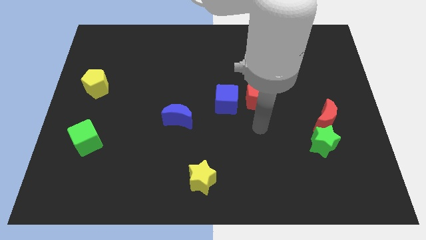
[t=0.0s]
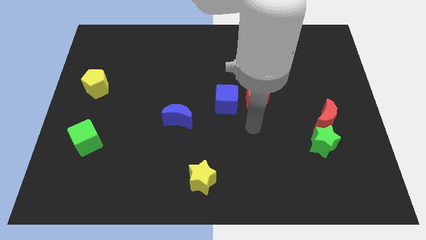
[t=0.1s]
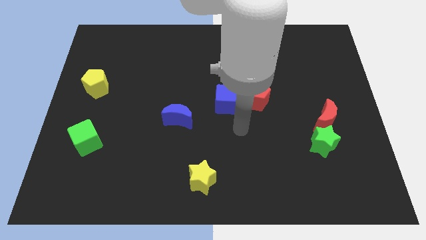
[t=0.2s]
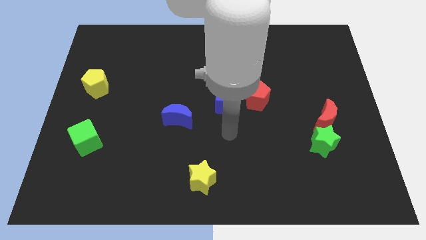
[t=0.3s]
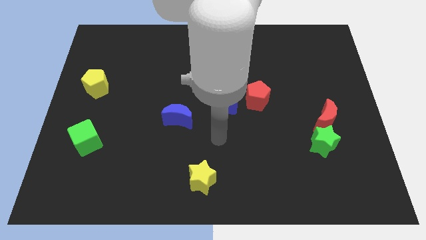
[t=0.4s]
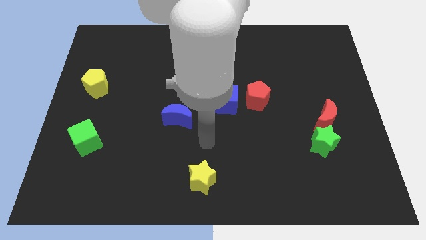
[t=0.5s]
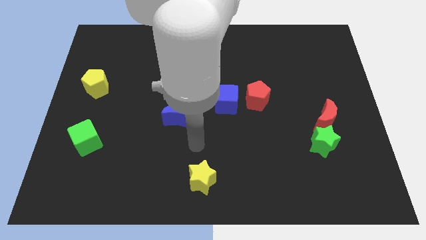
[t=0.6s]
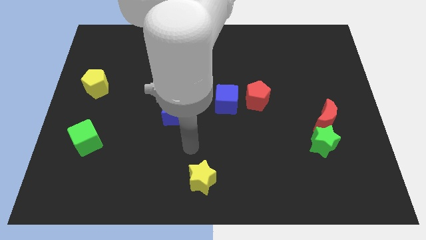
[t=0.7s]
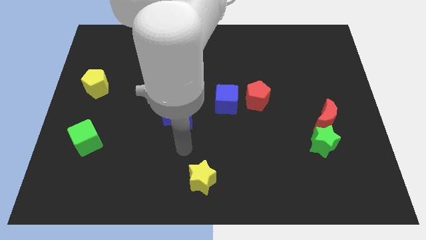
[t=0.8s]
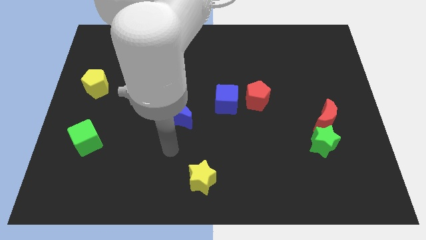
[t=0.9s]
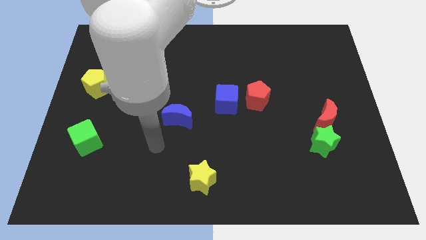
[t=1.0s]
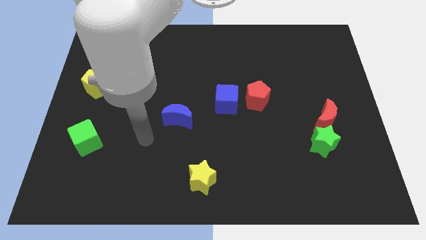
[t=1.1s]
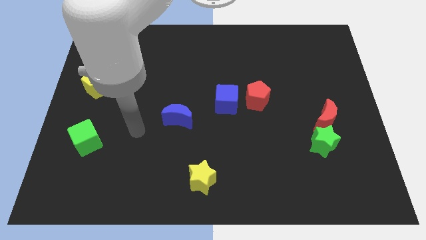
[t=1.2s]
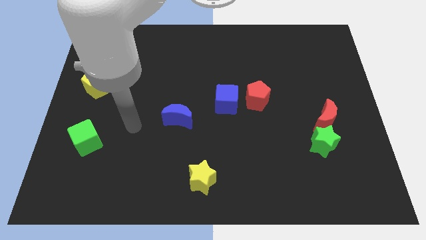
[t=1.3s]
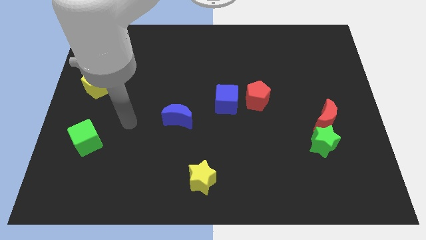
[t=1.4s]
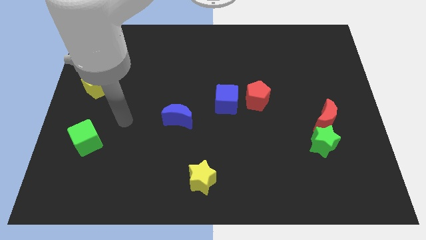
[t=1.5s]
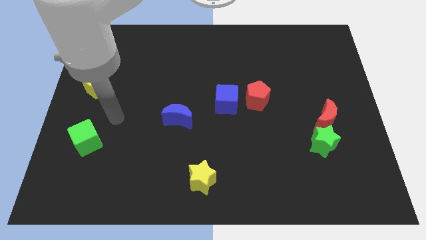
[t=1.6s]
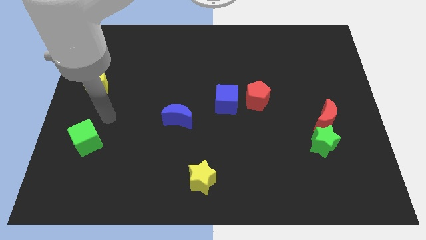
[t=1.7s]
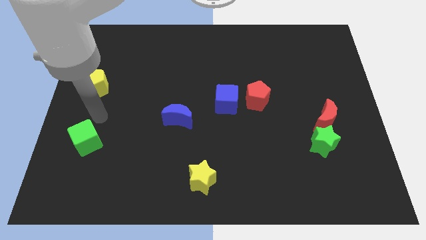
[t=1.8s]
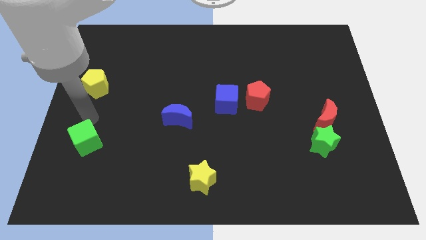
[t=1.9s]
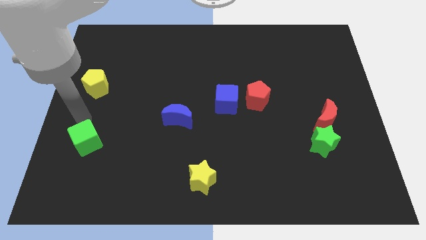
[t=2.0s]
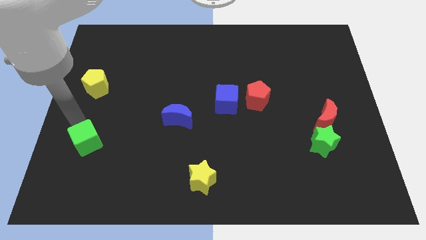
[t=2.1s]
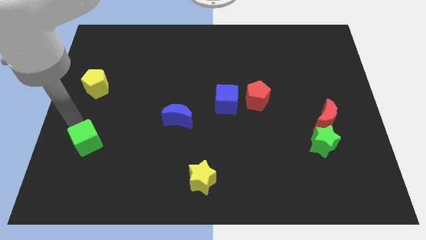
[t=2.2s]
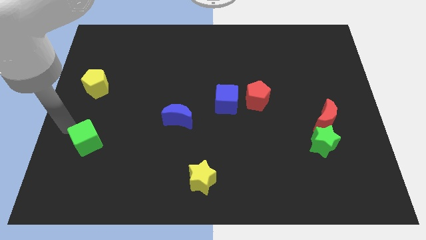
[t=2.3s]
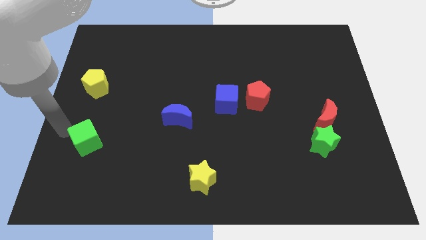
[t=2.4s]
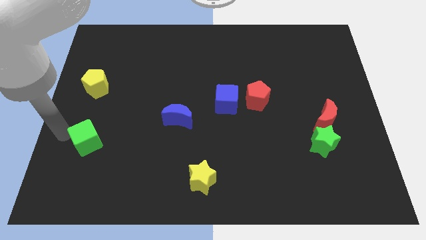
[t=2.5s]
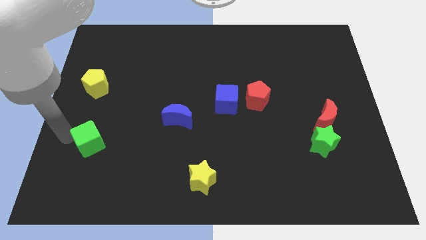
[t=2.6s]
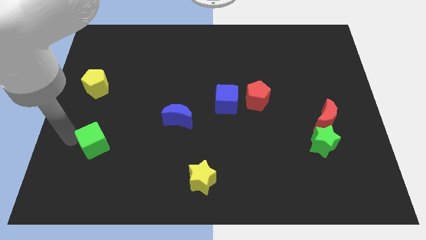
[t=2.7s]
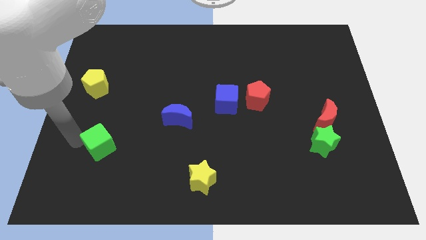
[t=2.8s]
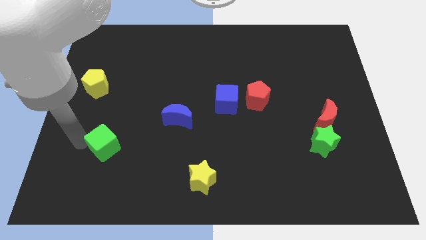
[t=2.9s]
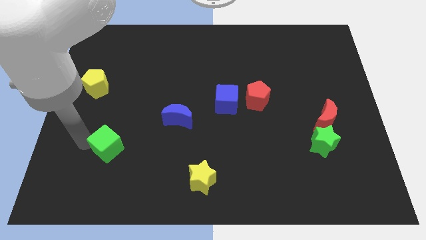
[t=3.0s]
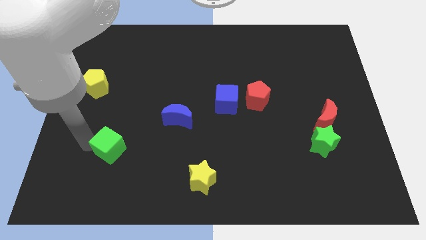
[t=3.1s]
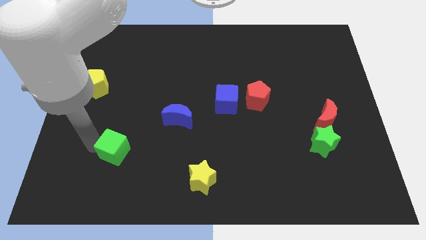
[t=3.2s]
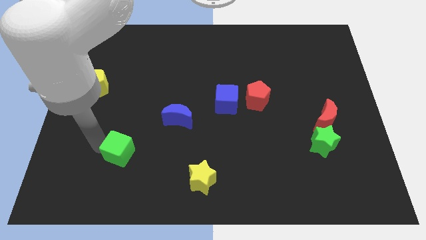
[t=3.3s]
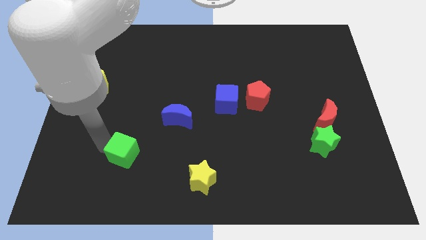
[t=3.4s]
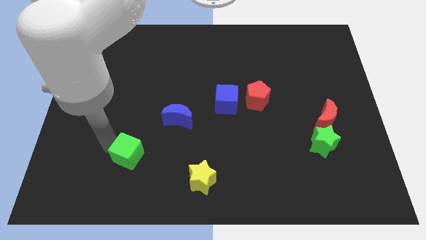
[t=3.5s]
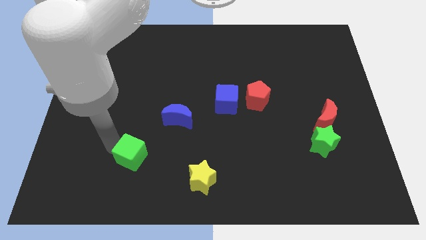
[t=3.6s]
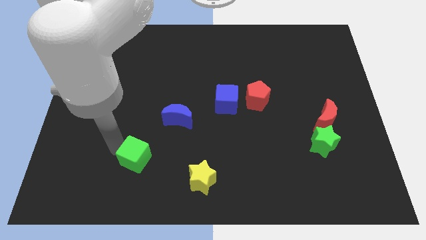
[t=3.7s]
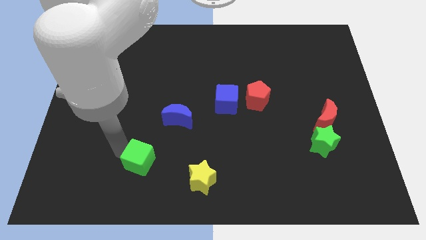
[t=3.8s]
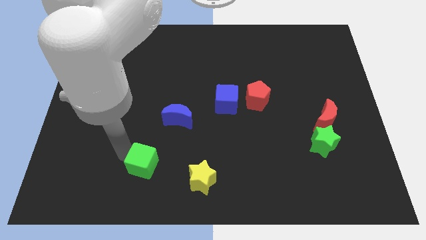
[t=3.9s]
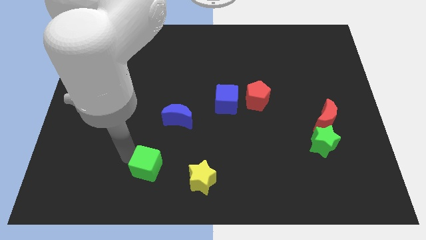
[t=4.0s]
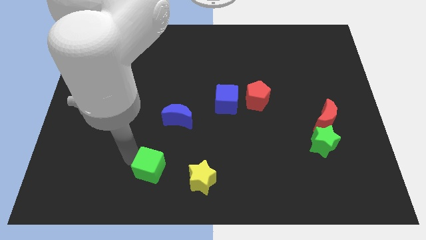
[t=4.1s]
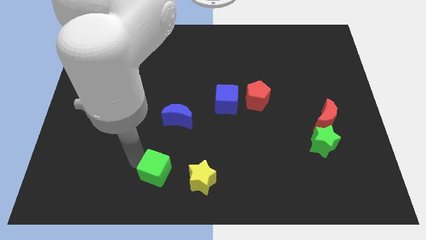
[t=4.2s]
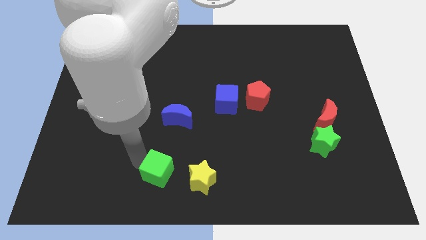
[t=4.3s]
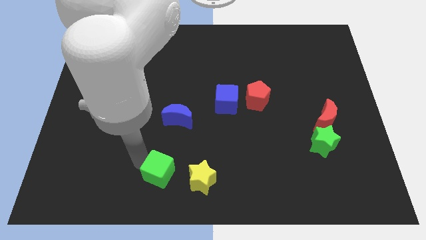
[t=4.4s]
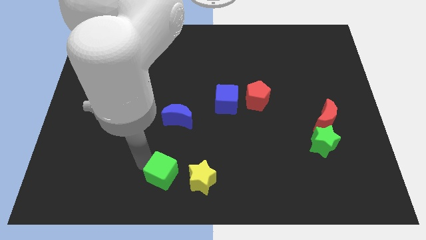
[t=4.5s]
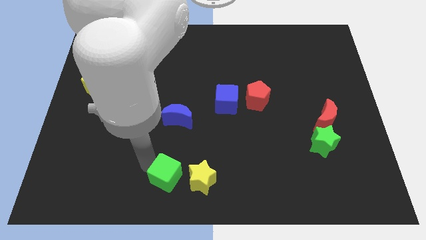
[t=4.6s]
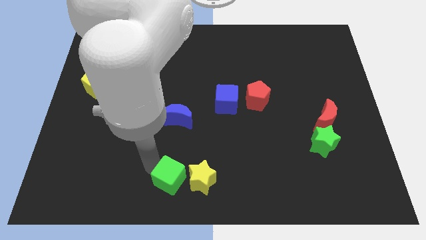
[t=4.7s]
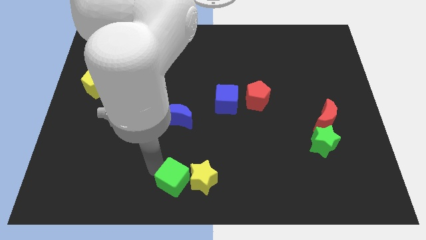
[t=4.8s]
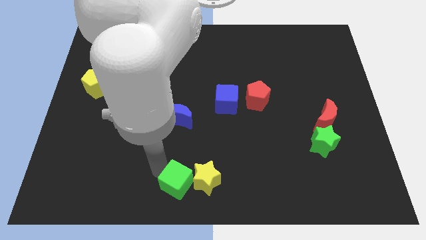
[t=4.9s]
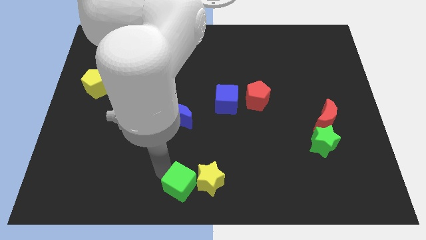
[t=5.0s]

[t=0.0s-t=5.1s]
put the green cube next to the yellow star

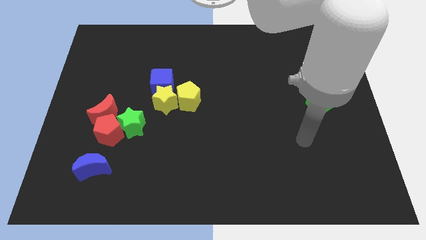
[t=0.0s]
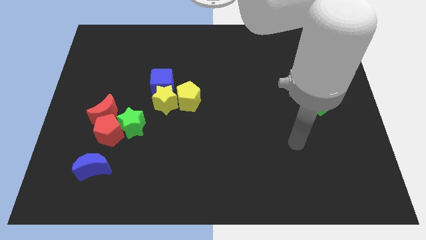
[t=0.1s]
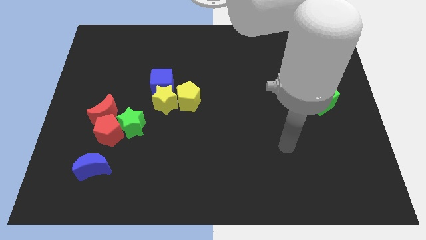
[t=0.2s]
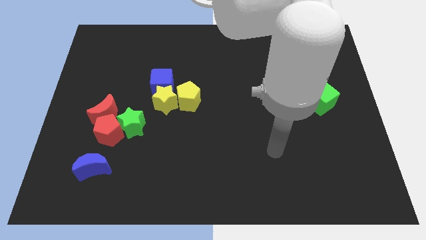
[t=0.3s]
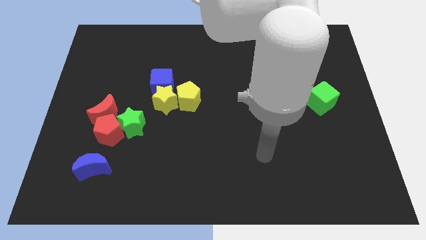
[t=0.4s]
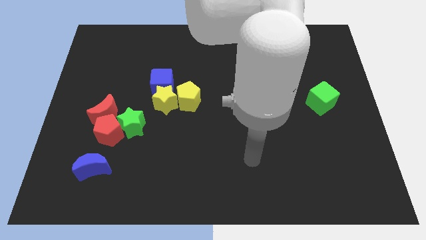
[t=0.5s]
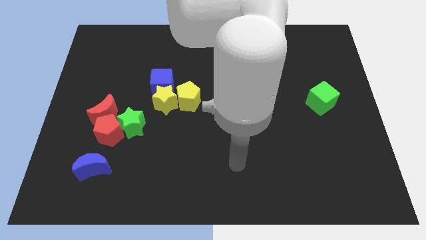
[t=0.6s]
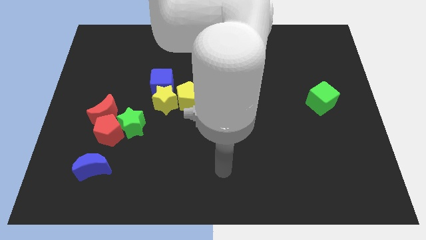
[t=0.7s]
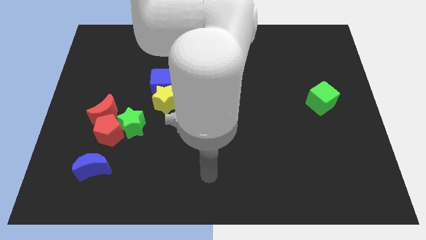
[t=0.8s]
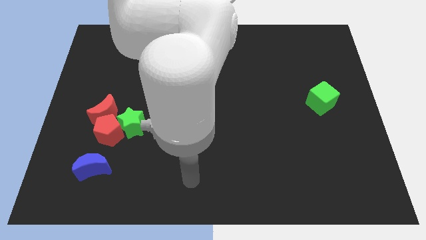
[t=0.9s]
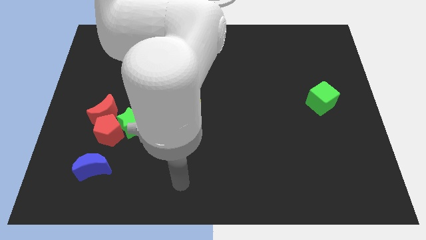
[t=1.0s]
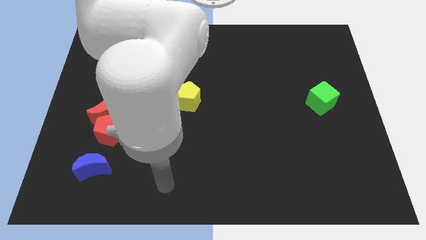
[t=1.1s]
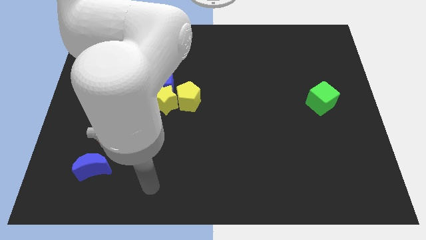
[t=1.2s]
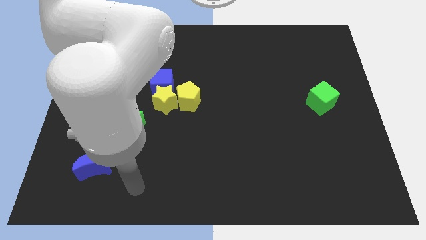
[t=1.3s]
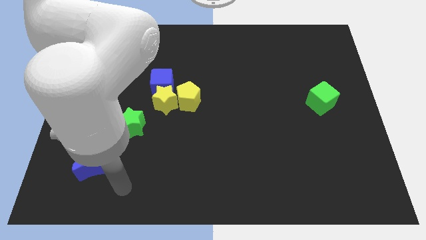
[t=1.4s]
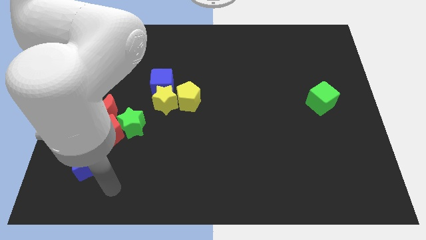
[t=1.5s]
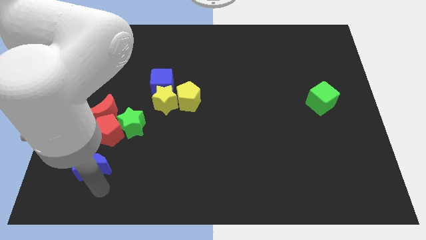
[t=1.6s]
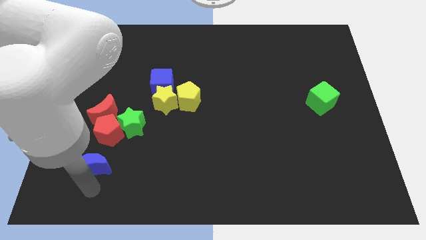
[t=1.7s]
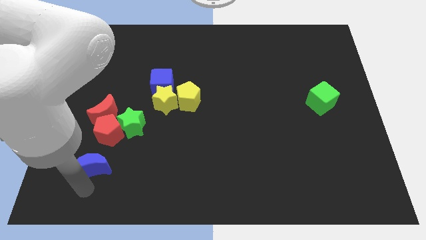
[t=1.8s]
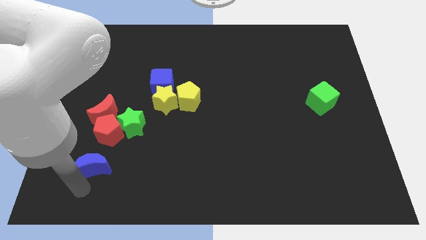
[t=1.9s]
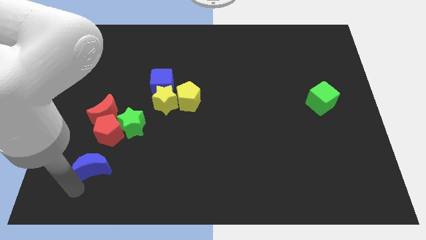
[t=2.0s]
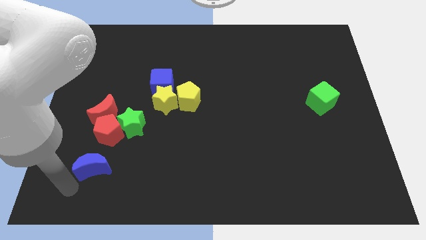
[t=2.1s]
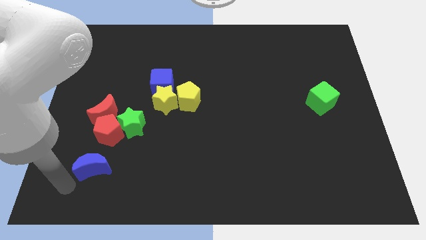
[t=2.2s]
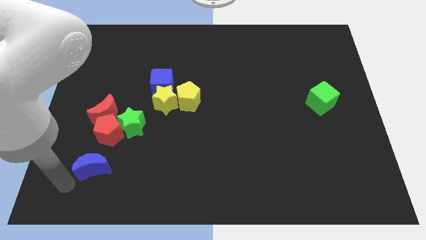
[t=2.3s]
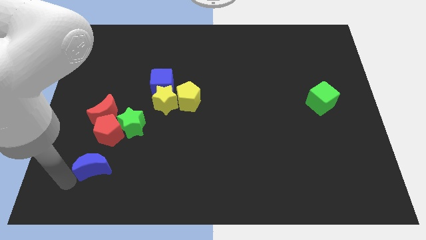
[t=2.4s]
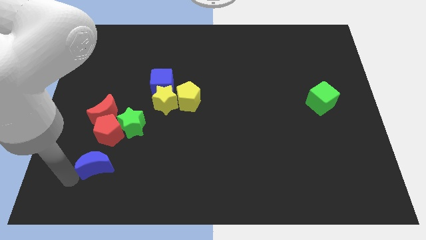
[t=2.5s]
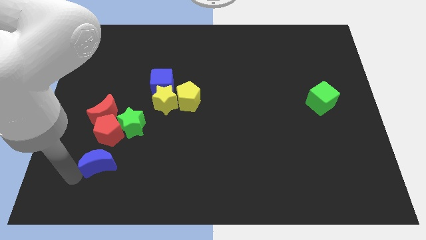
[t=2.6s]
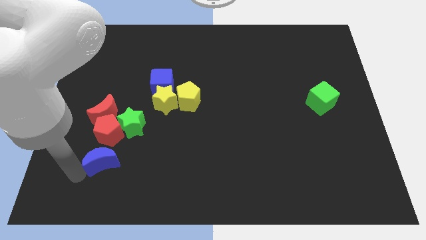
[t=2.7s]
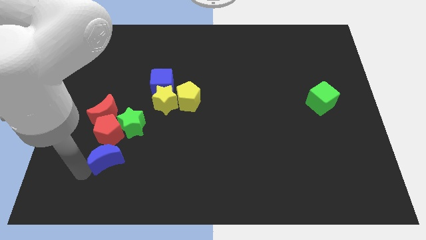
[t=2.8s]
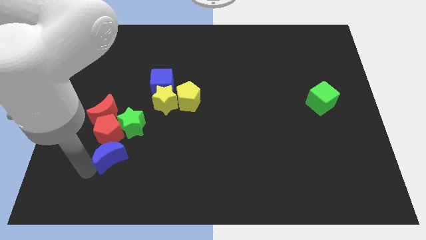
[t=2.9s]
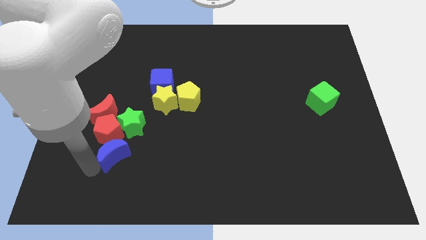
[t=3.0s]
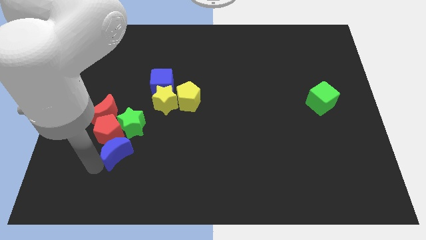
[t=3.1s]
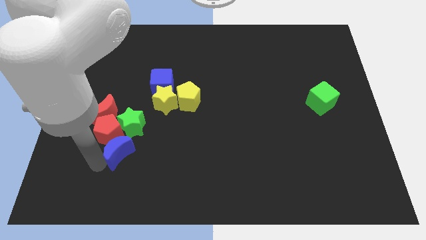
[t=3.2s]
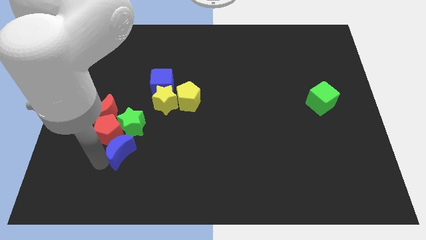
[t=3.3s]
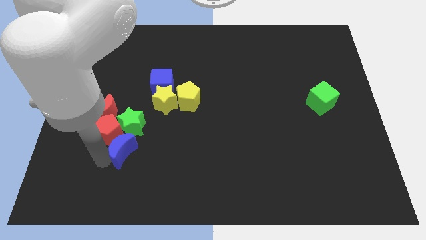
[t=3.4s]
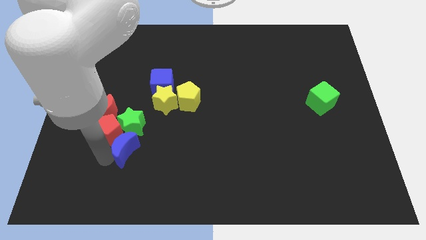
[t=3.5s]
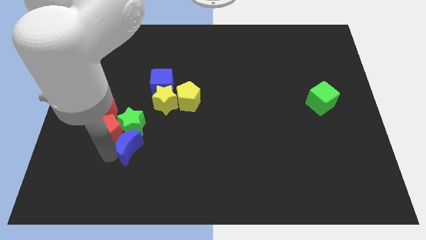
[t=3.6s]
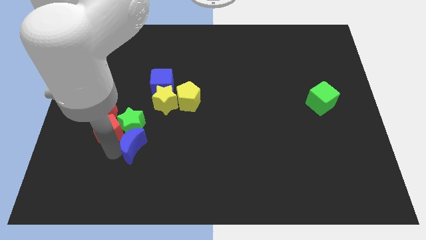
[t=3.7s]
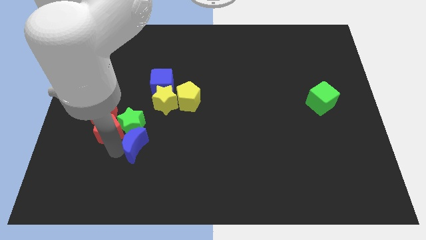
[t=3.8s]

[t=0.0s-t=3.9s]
put the blue moon close to the green star
